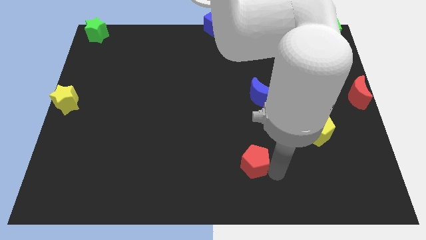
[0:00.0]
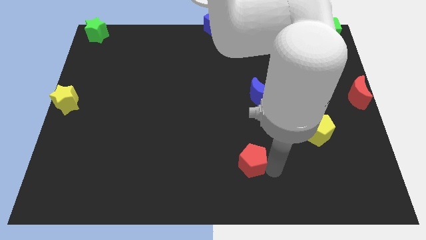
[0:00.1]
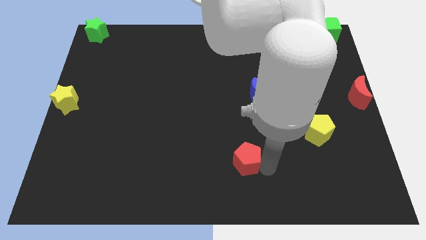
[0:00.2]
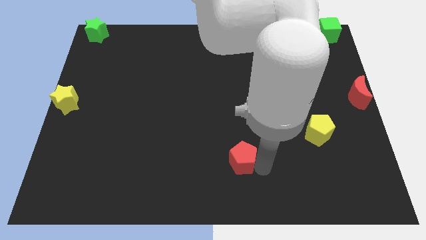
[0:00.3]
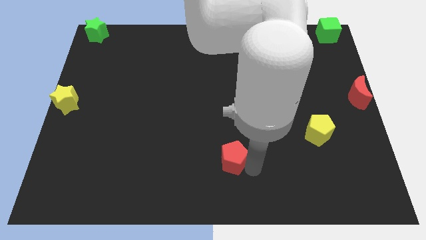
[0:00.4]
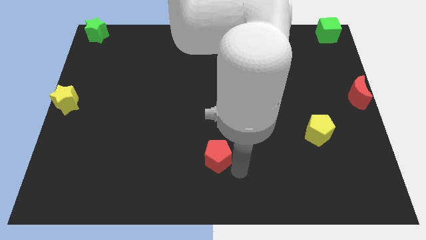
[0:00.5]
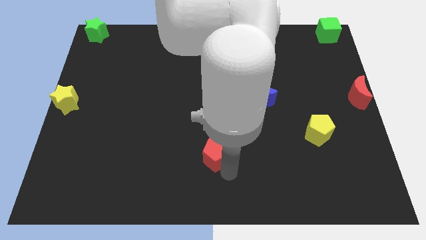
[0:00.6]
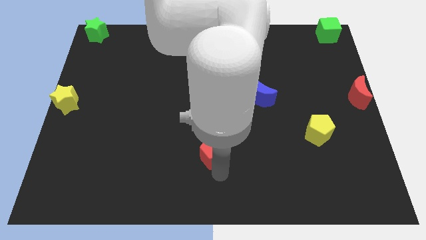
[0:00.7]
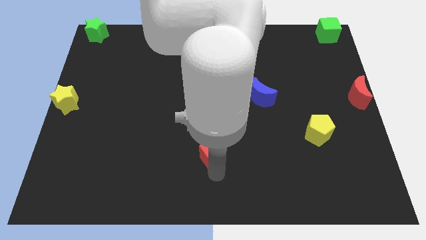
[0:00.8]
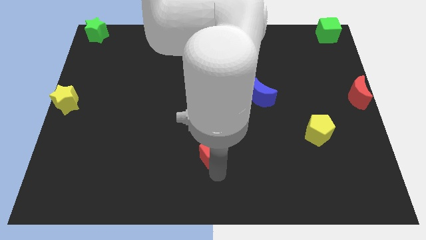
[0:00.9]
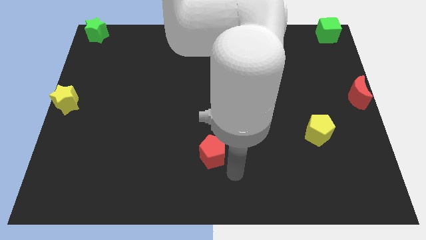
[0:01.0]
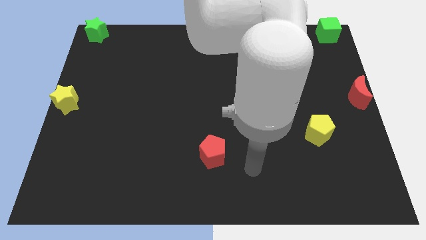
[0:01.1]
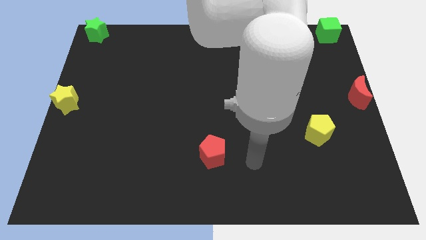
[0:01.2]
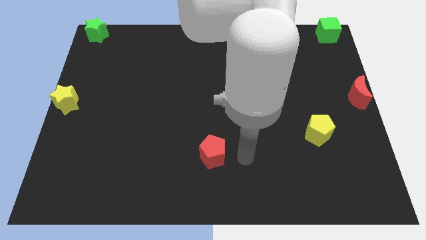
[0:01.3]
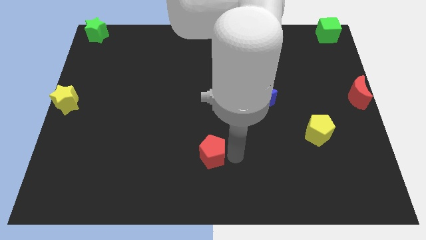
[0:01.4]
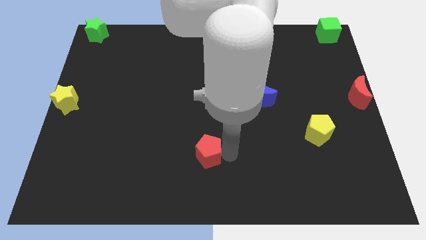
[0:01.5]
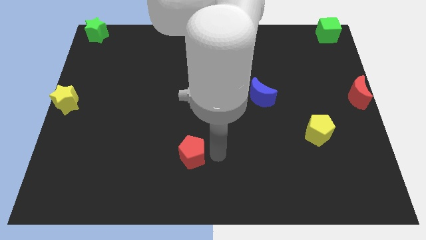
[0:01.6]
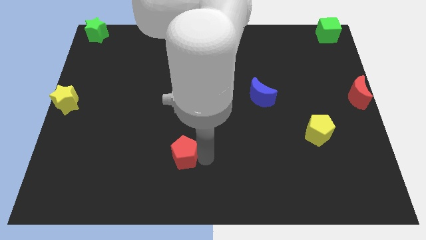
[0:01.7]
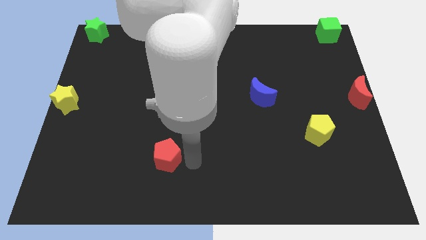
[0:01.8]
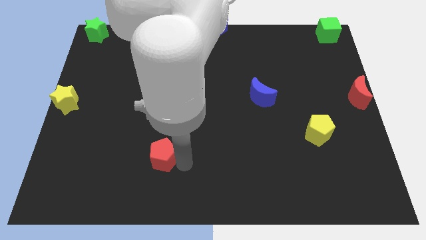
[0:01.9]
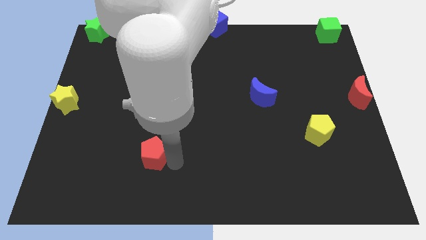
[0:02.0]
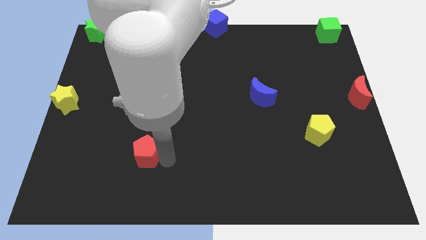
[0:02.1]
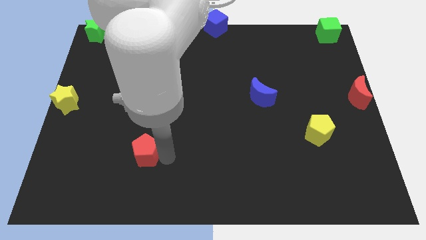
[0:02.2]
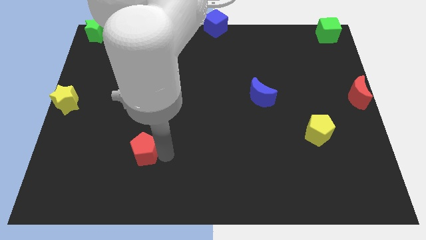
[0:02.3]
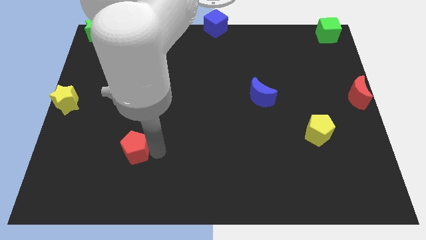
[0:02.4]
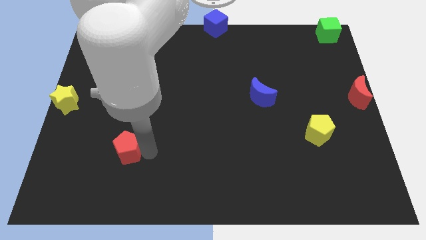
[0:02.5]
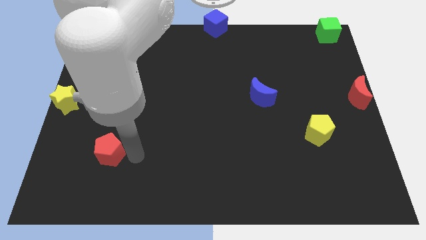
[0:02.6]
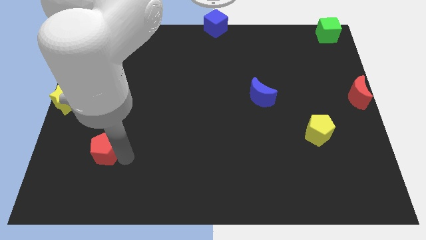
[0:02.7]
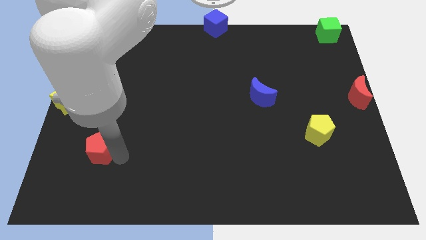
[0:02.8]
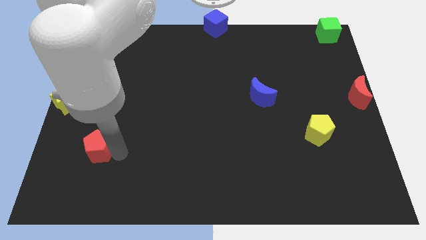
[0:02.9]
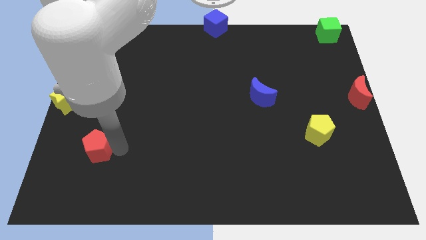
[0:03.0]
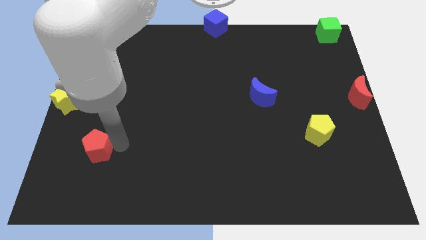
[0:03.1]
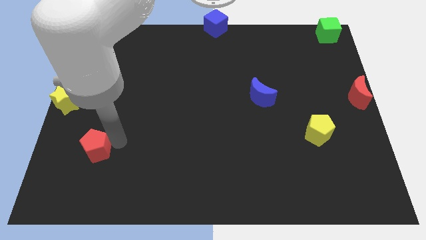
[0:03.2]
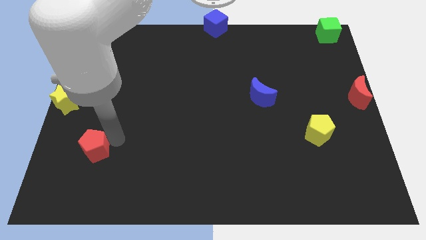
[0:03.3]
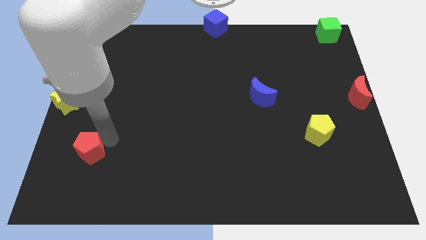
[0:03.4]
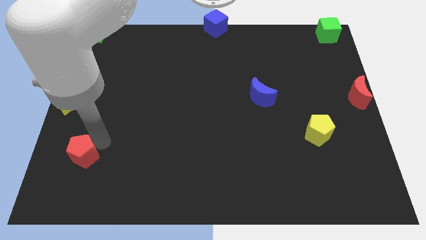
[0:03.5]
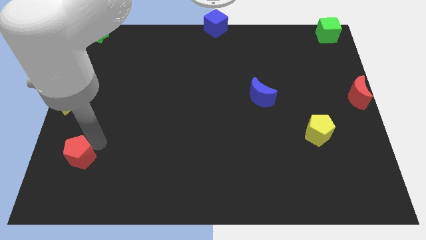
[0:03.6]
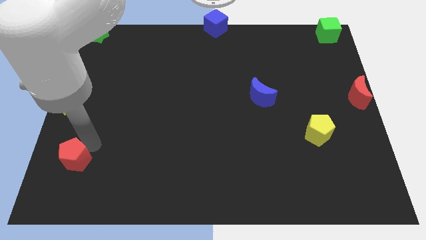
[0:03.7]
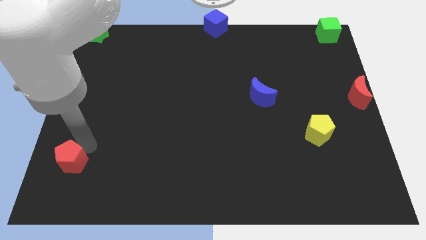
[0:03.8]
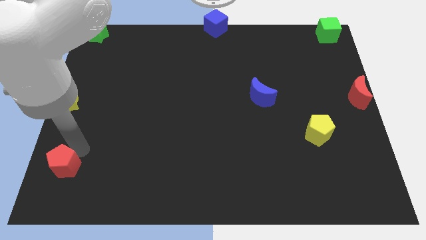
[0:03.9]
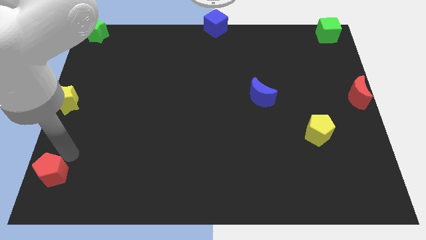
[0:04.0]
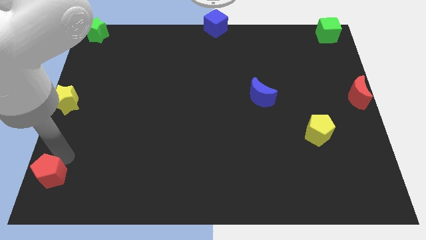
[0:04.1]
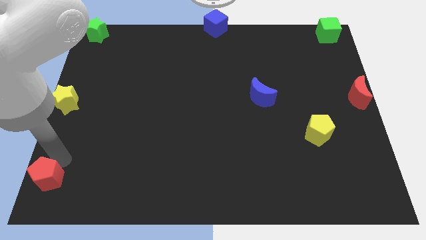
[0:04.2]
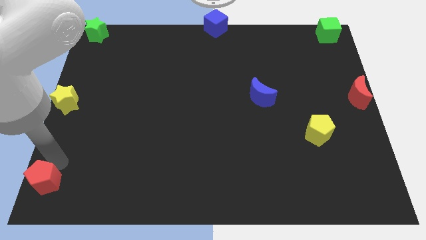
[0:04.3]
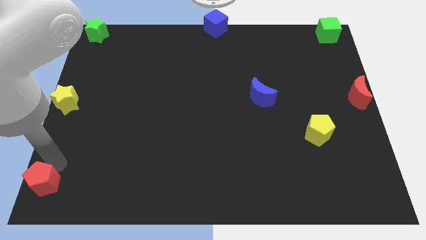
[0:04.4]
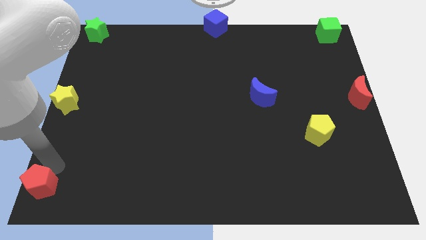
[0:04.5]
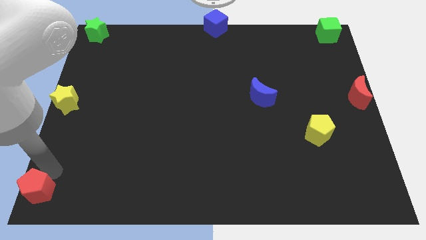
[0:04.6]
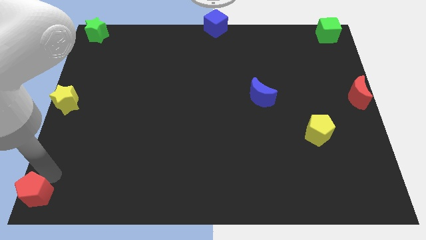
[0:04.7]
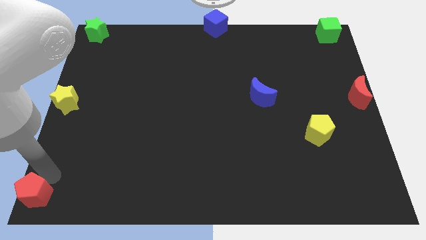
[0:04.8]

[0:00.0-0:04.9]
move the red pentagon towards the bottom left side of the board

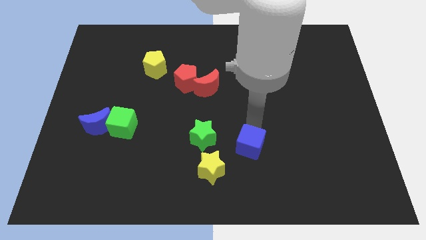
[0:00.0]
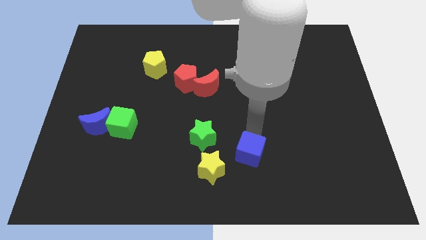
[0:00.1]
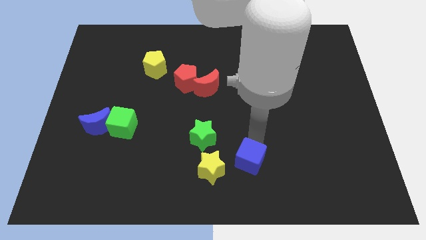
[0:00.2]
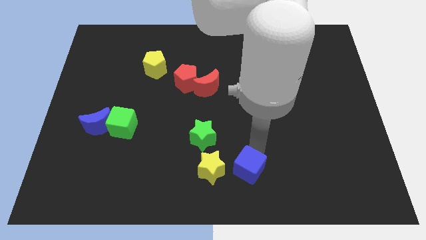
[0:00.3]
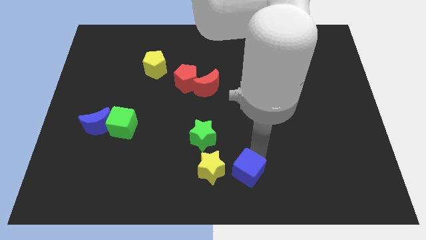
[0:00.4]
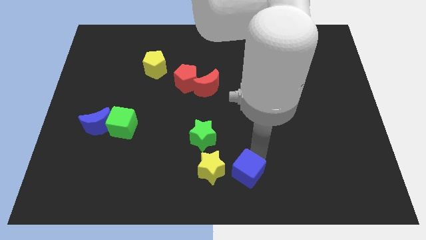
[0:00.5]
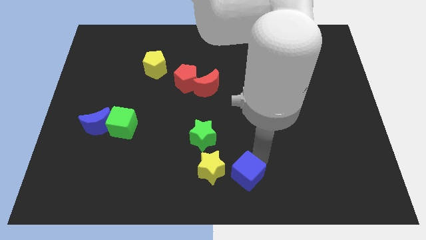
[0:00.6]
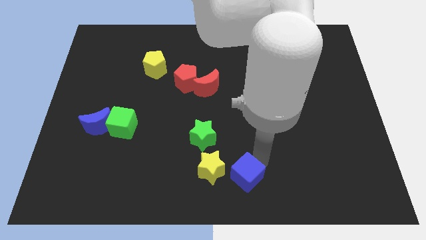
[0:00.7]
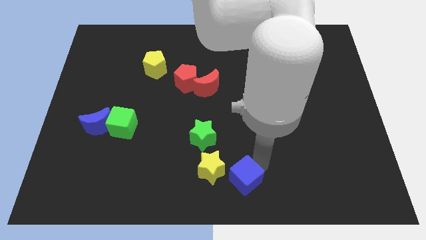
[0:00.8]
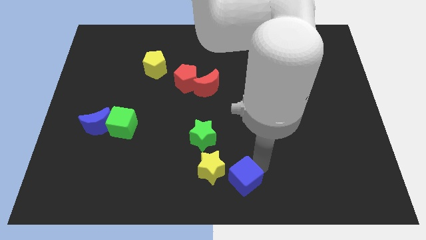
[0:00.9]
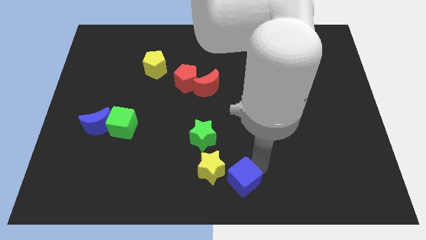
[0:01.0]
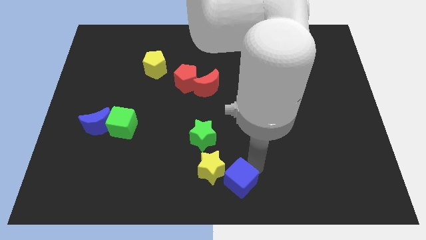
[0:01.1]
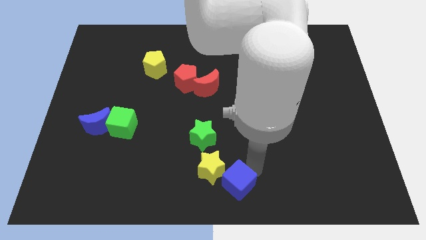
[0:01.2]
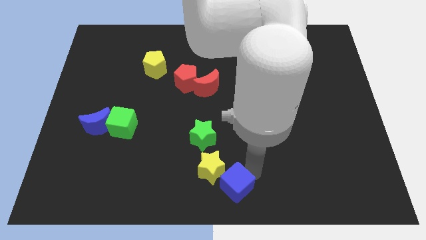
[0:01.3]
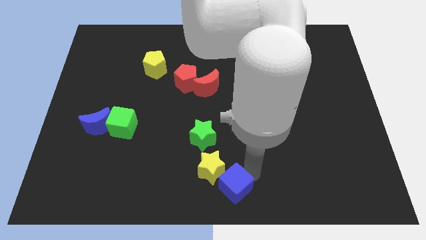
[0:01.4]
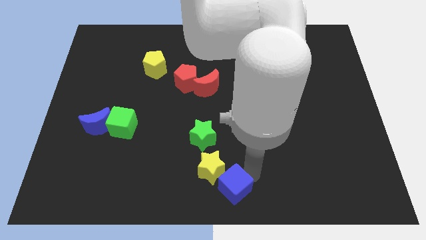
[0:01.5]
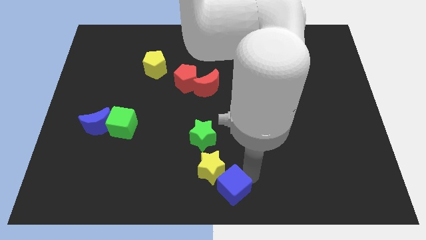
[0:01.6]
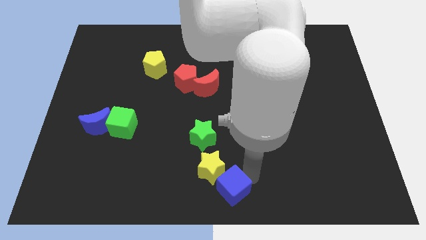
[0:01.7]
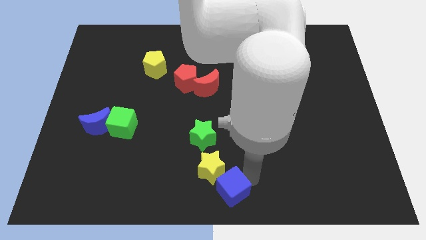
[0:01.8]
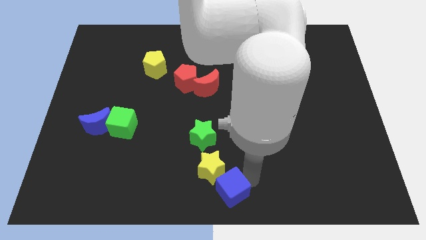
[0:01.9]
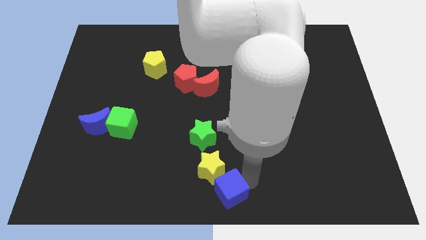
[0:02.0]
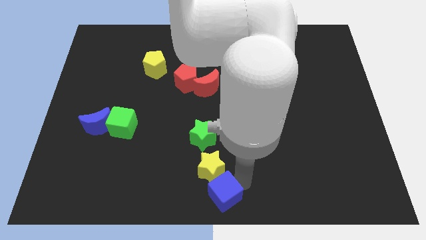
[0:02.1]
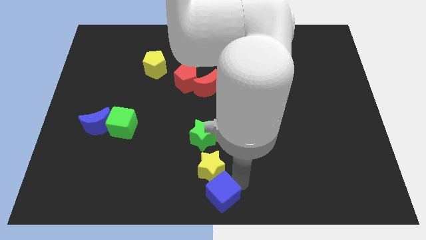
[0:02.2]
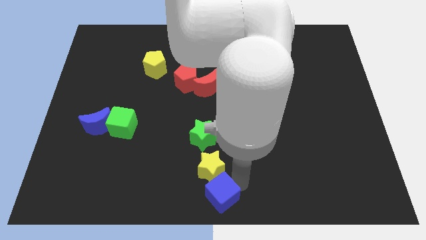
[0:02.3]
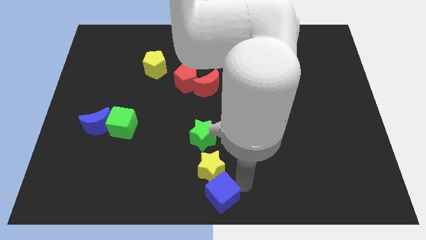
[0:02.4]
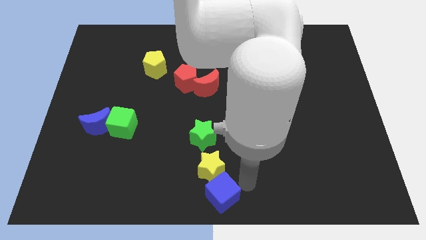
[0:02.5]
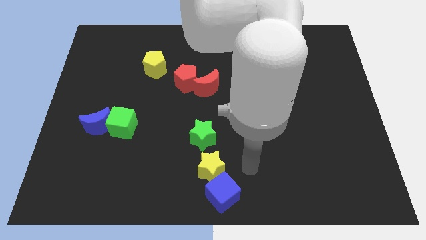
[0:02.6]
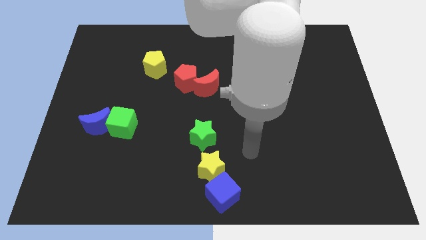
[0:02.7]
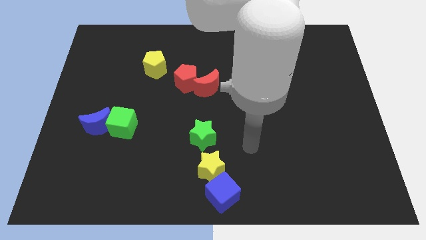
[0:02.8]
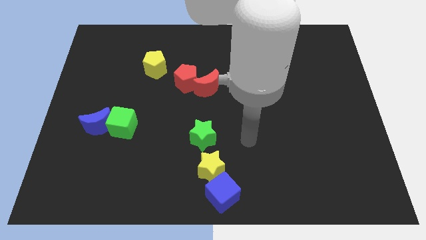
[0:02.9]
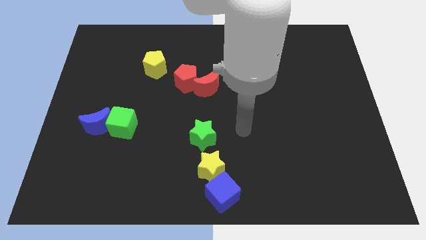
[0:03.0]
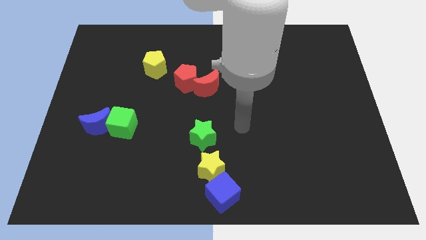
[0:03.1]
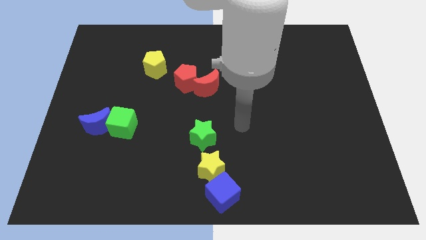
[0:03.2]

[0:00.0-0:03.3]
move blue cube at the bottom of yellow star

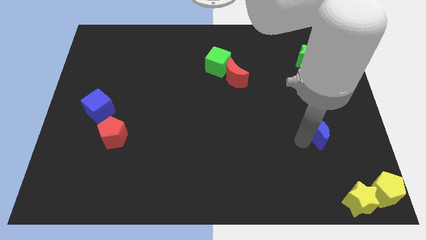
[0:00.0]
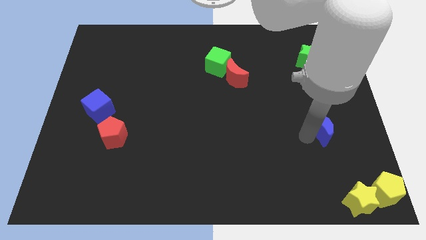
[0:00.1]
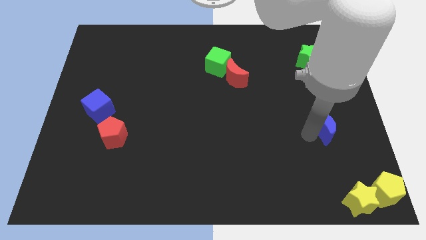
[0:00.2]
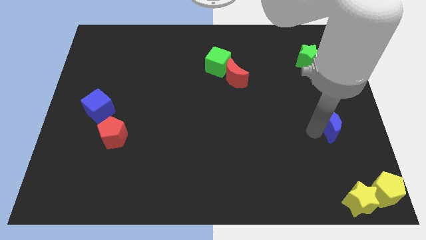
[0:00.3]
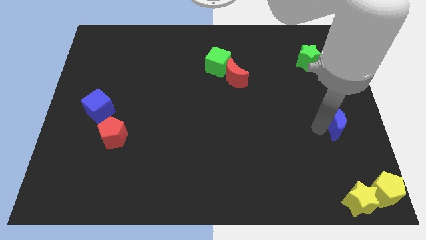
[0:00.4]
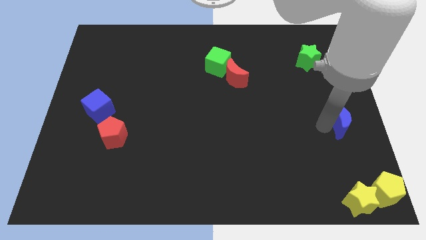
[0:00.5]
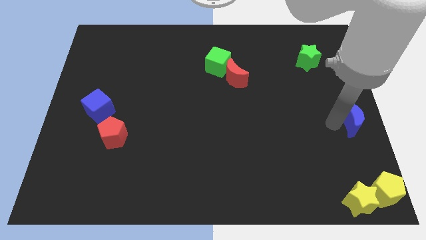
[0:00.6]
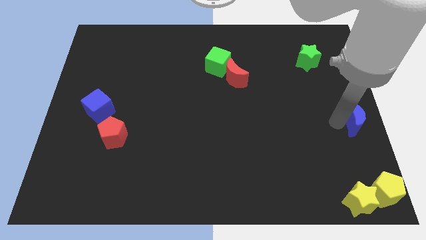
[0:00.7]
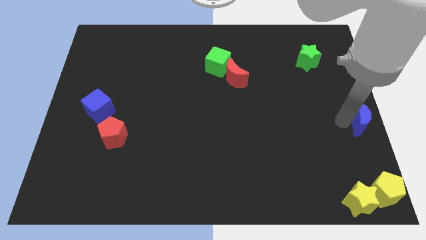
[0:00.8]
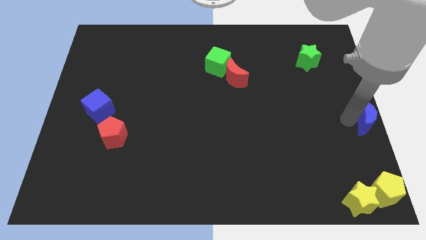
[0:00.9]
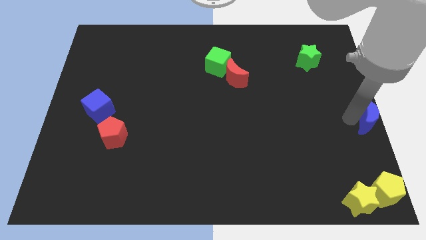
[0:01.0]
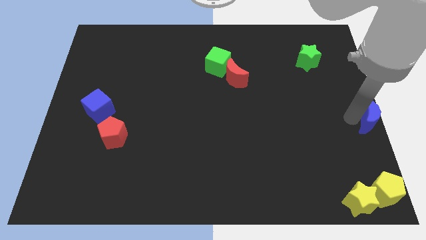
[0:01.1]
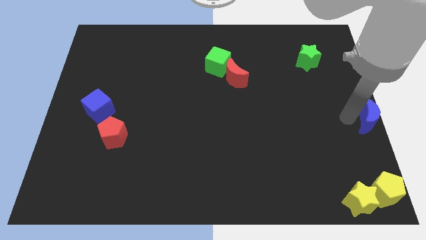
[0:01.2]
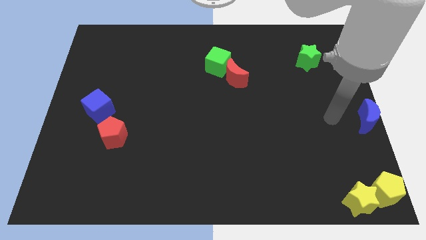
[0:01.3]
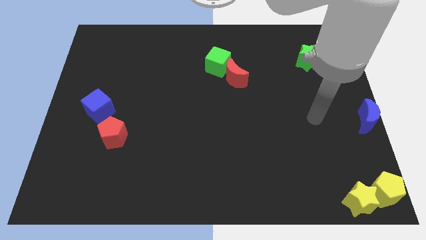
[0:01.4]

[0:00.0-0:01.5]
place the blue moon above the yellow pentagon
